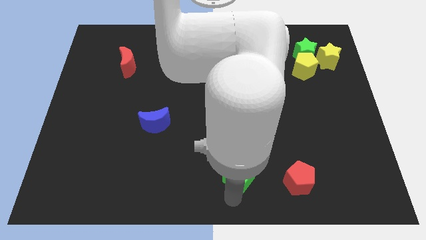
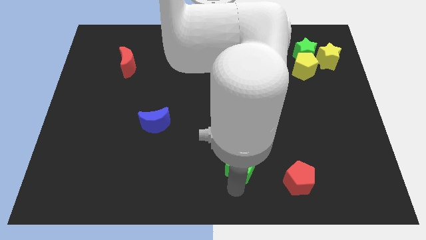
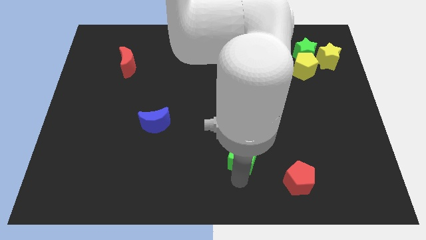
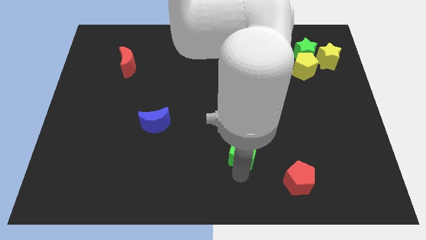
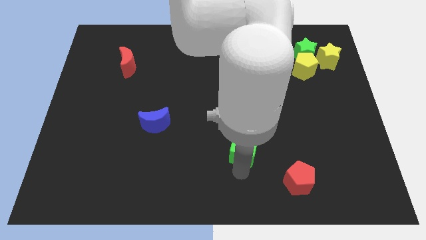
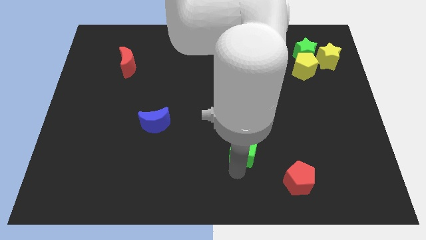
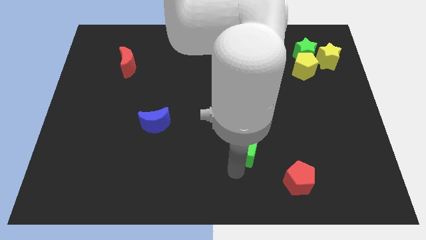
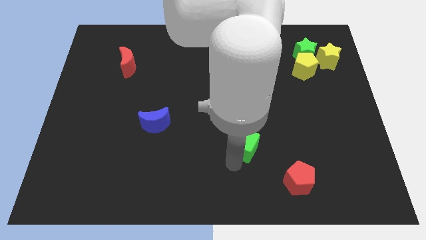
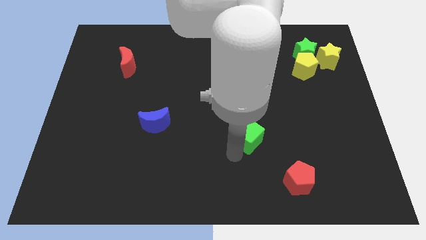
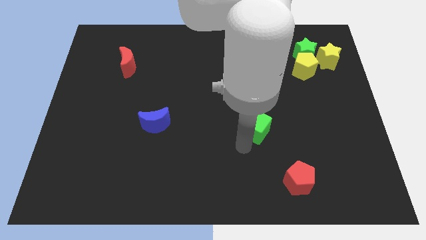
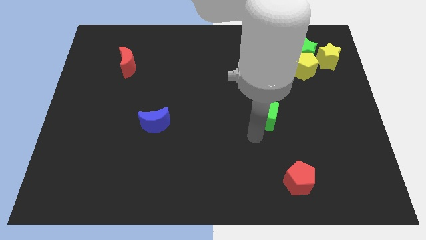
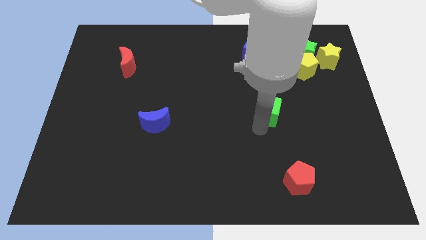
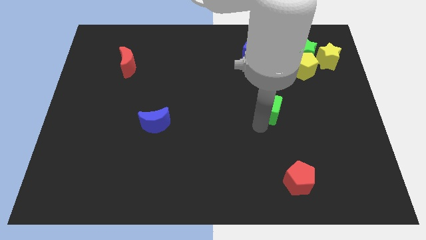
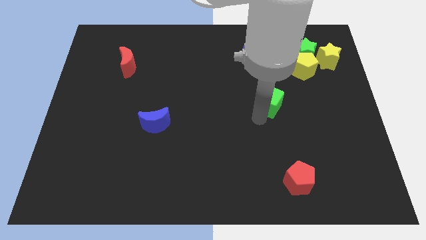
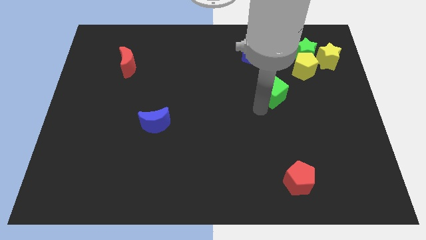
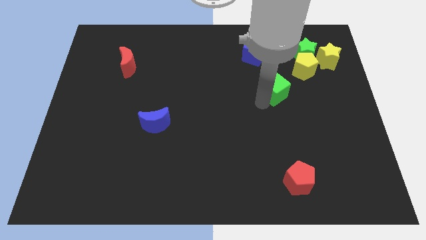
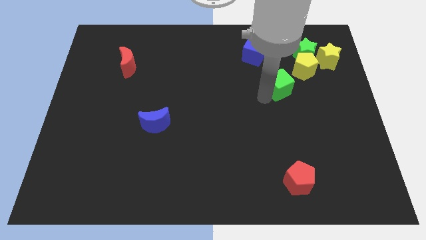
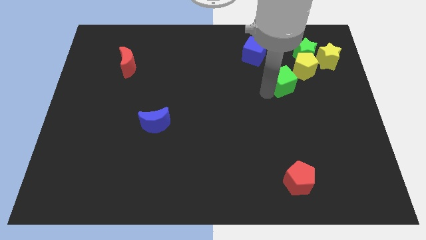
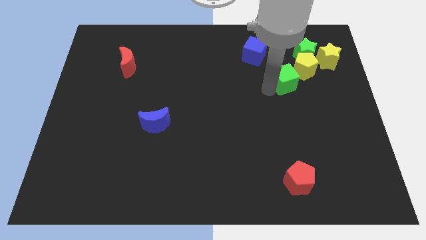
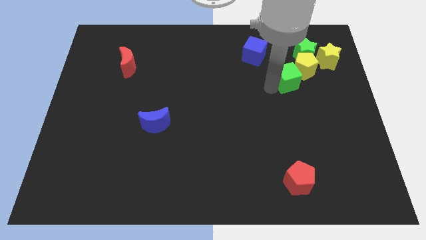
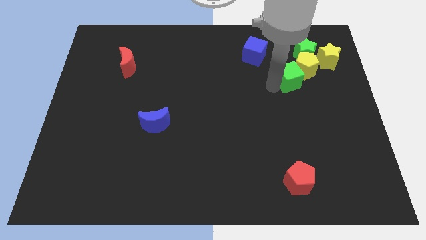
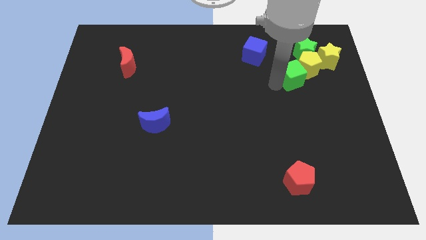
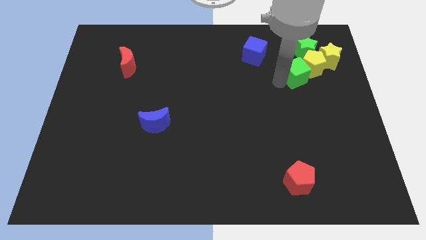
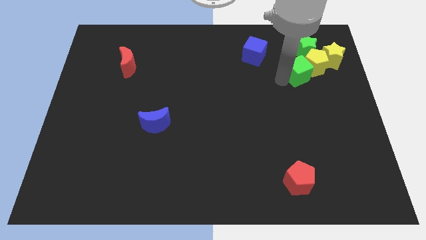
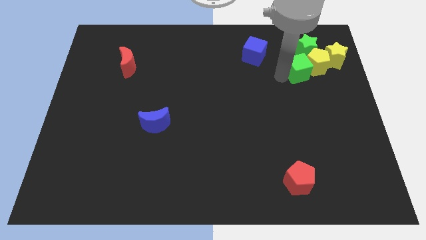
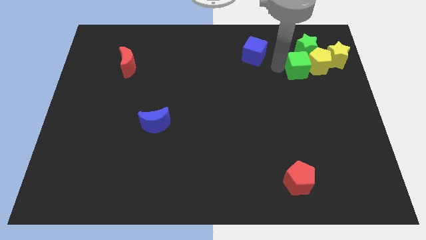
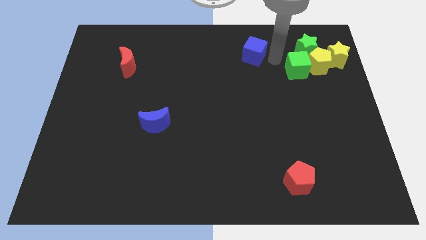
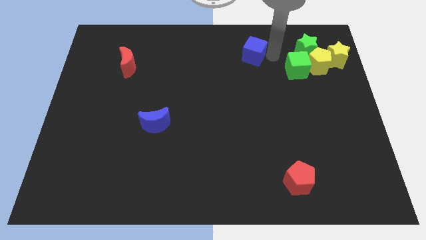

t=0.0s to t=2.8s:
push the green cube towards the group of blocks

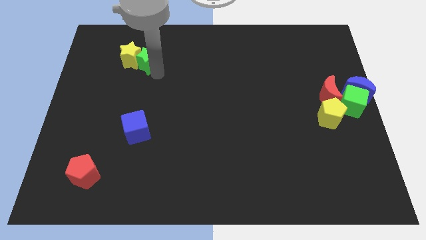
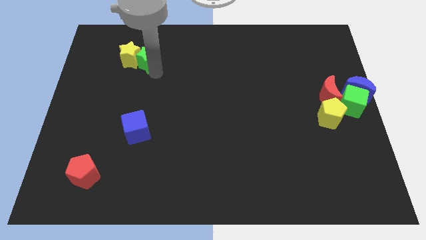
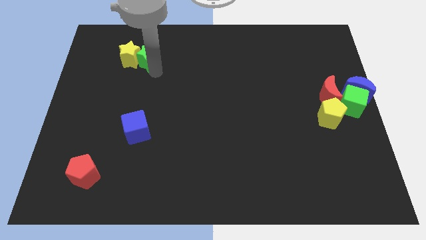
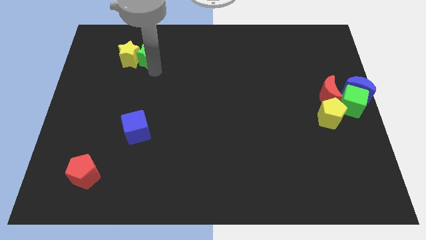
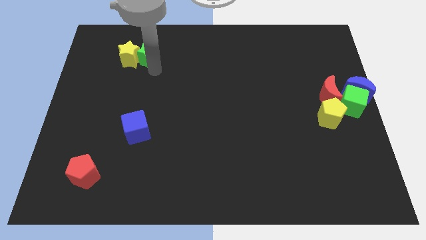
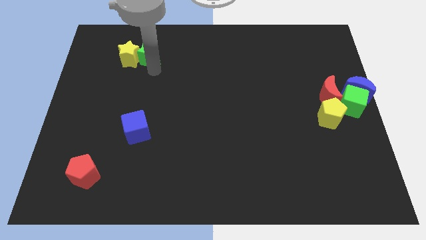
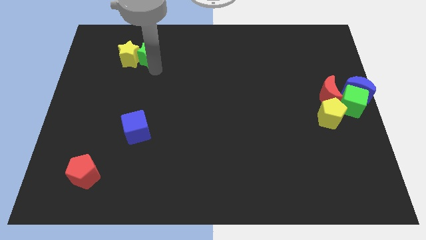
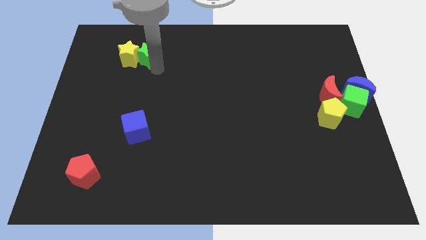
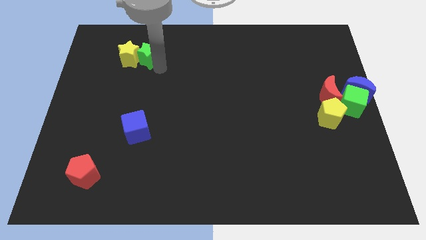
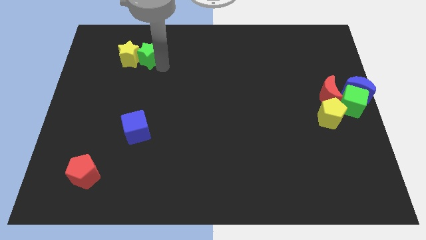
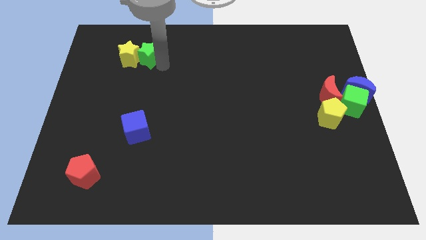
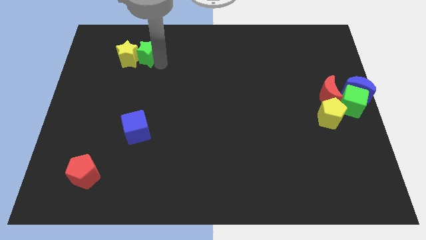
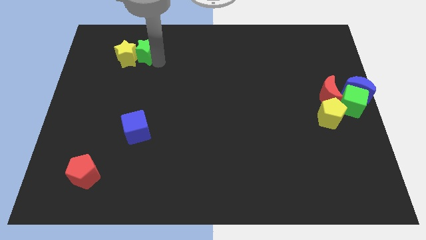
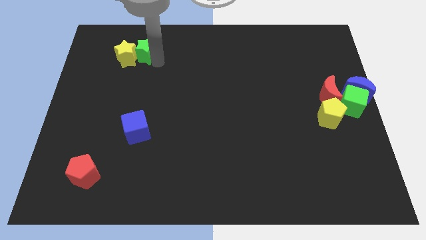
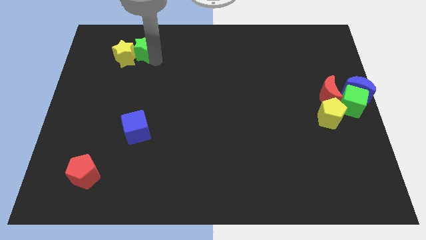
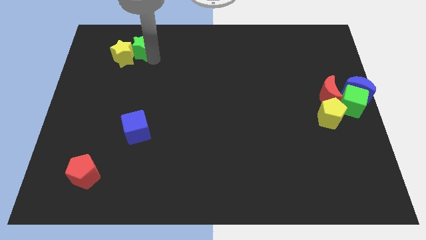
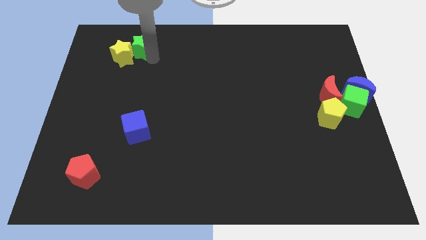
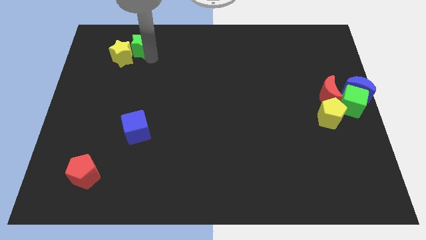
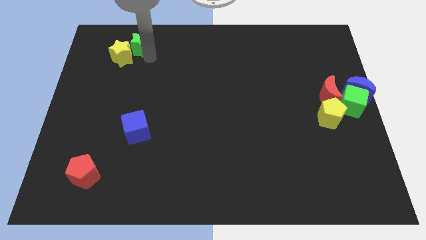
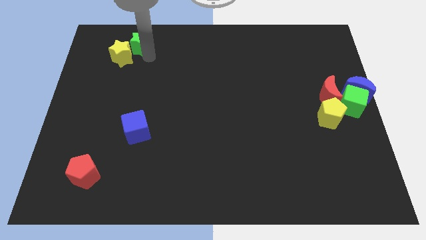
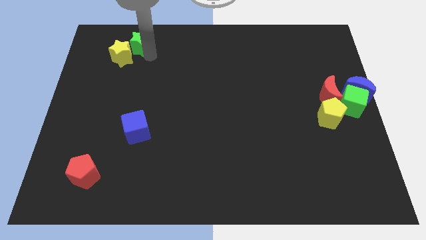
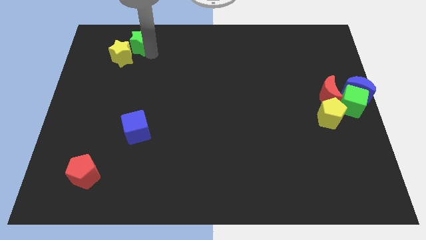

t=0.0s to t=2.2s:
push the green star to the top right of yellow star

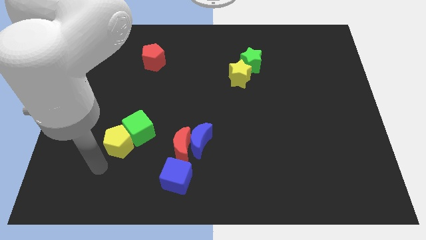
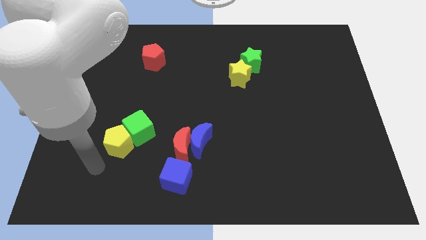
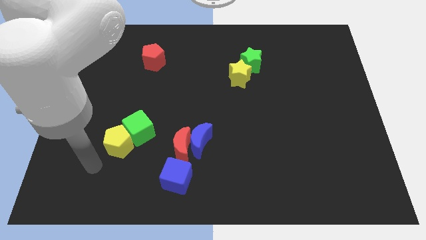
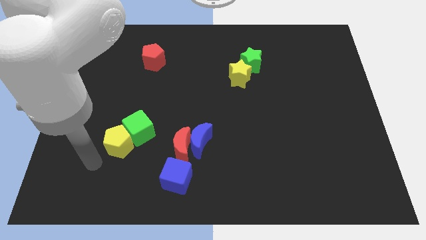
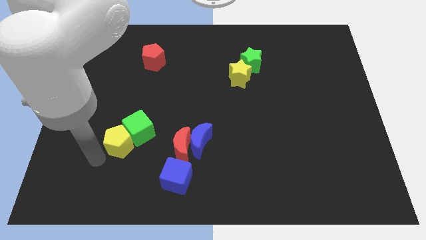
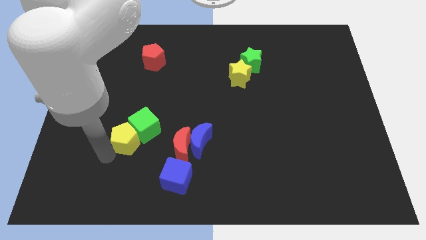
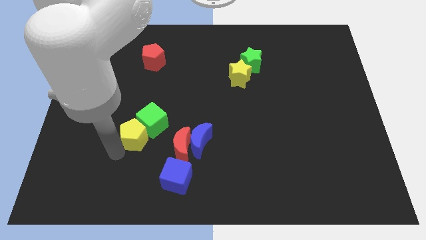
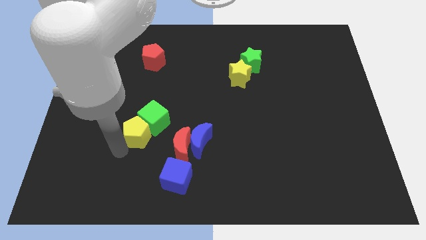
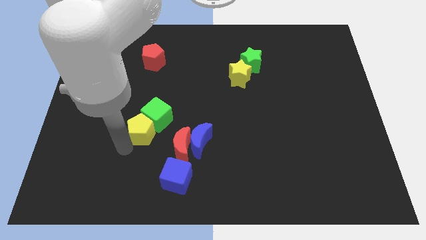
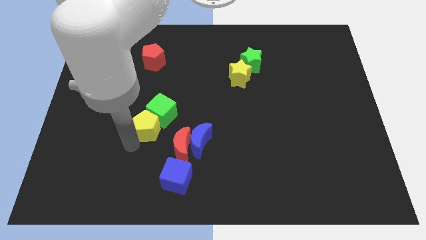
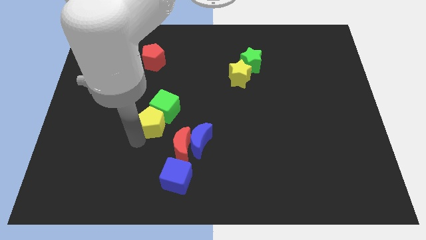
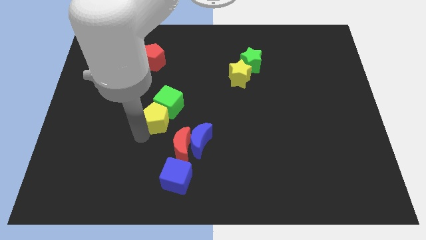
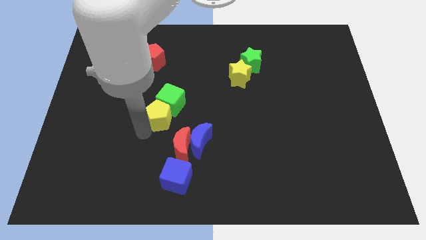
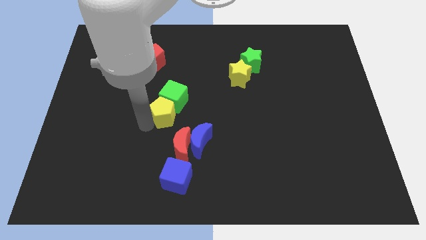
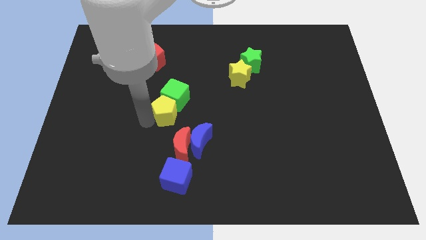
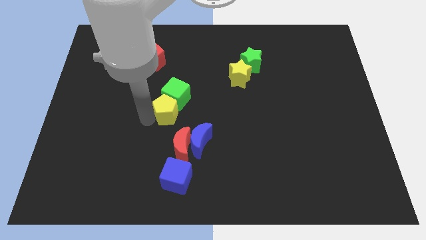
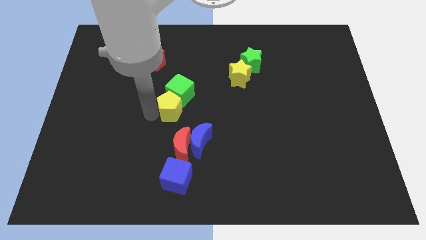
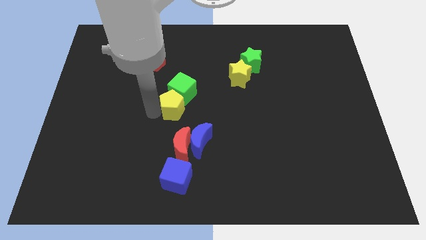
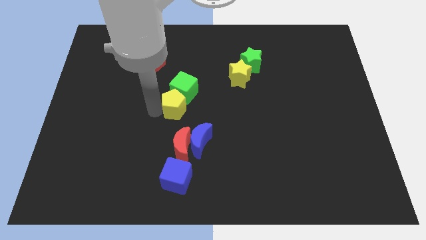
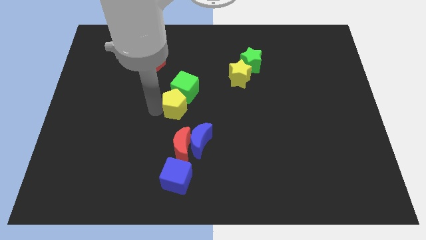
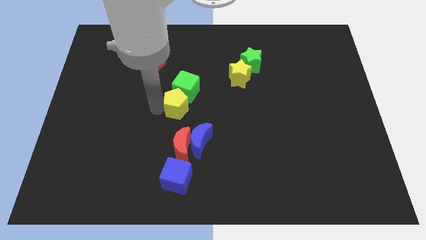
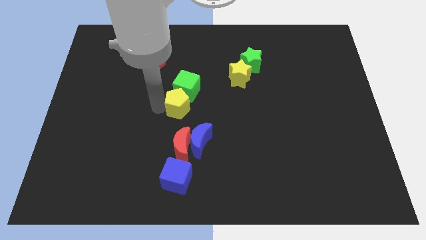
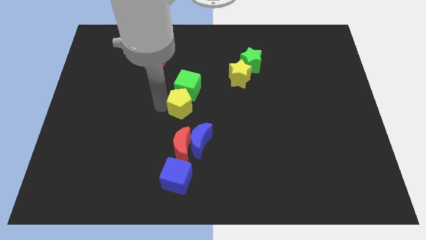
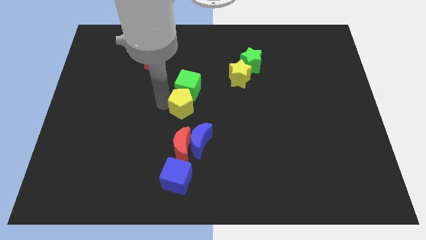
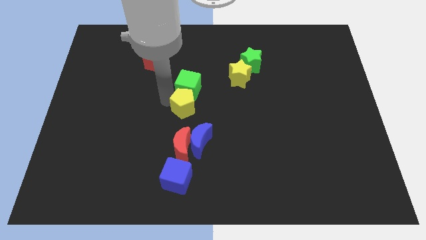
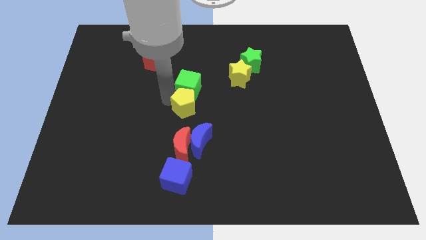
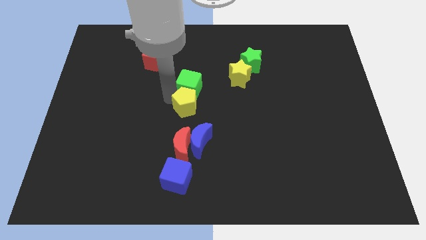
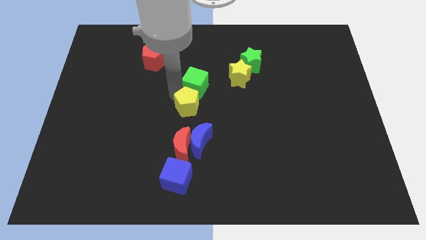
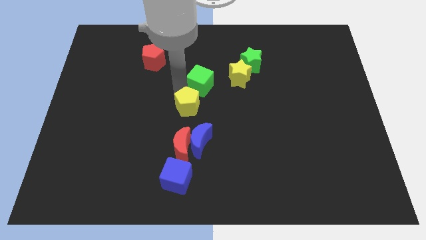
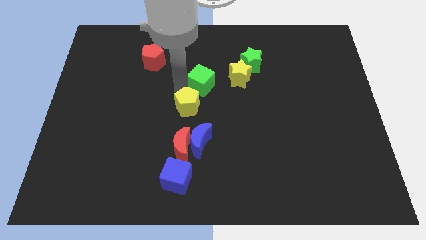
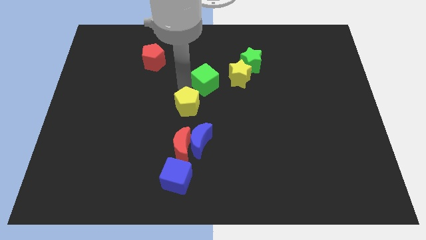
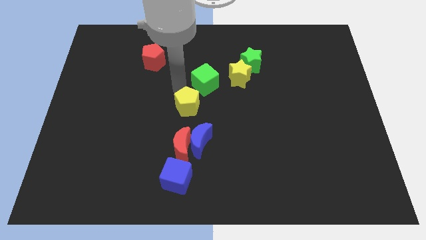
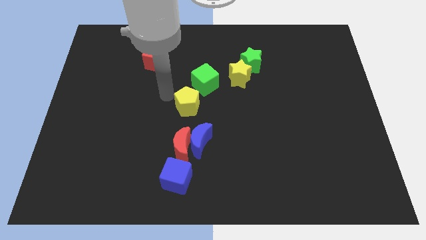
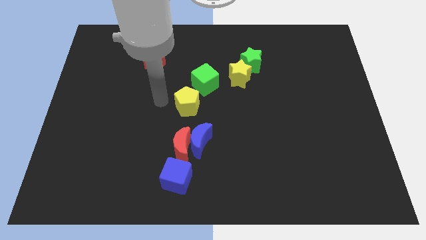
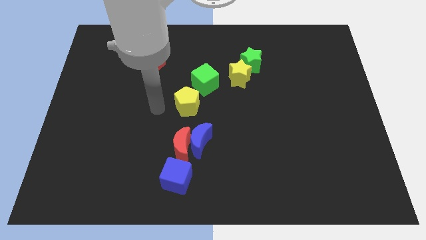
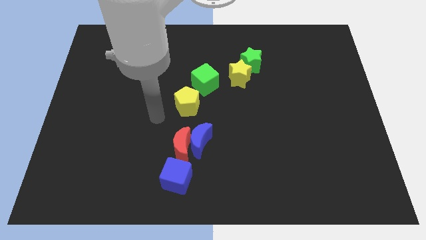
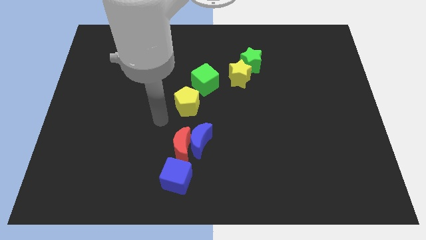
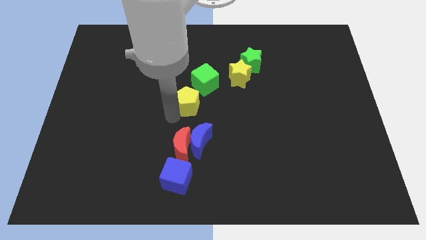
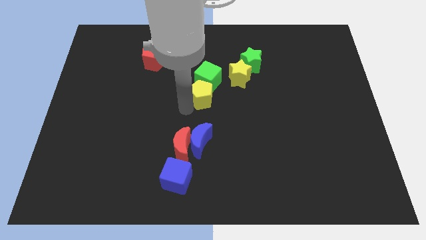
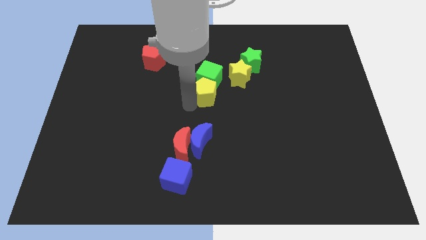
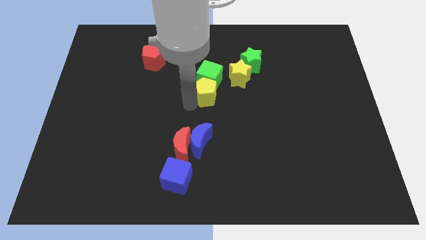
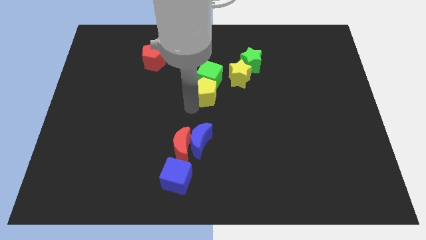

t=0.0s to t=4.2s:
push the green cube to the left of the yellow star
